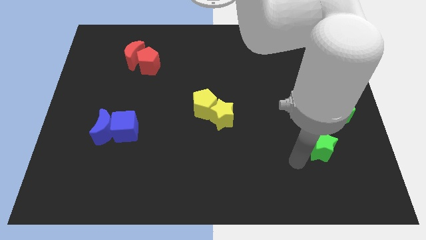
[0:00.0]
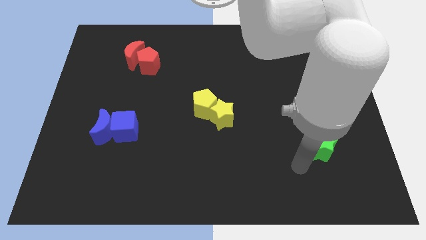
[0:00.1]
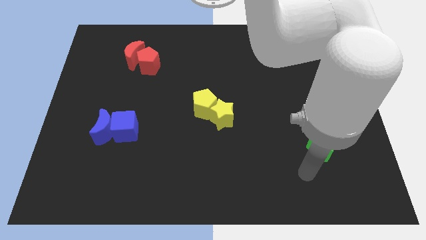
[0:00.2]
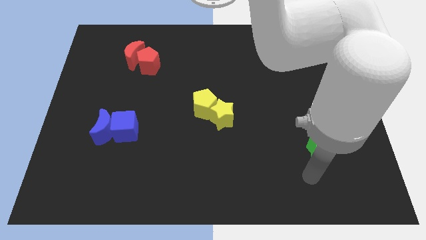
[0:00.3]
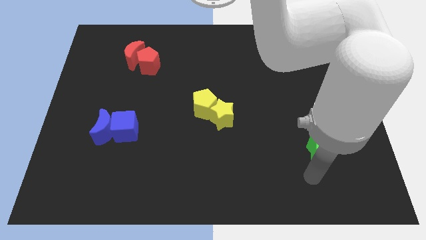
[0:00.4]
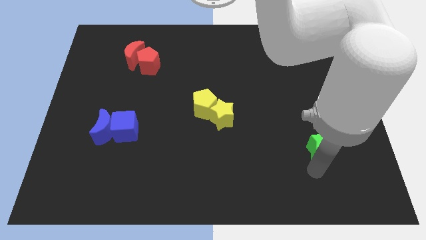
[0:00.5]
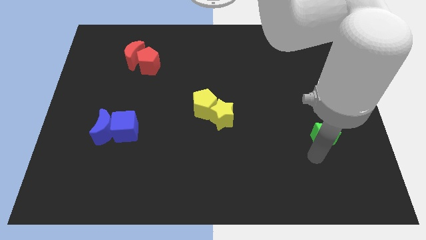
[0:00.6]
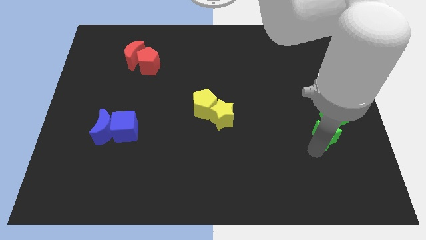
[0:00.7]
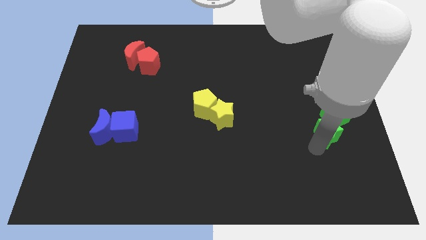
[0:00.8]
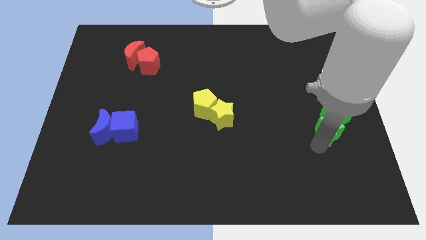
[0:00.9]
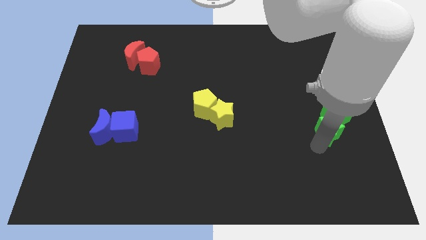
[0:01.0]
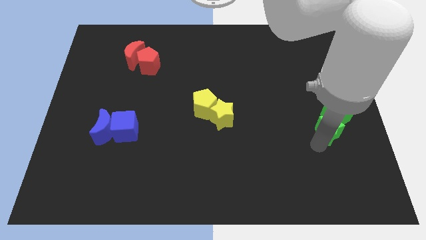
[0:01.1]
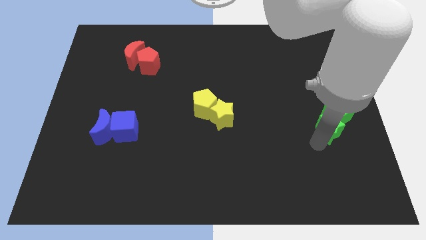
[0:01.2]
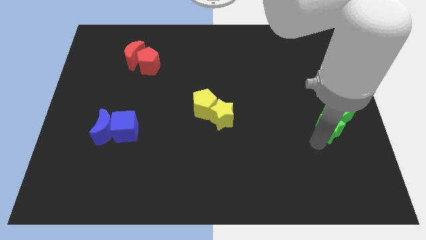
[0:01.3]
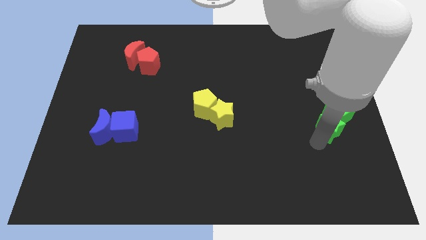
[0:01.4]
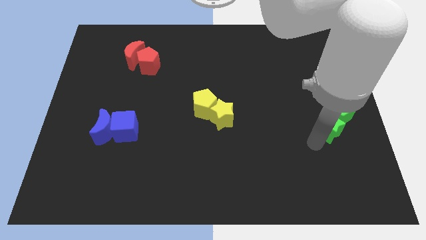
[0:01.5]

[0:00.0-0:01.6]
slide the green star into the bottom left of the green cube

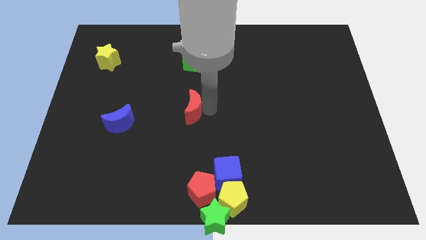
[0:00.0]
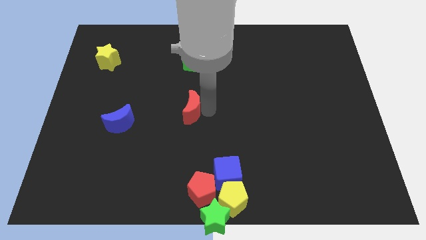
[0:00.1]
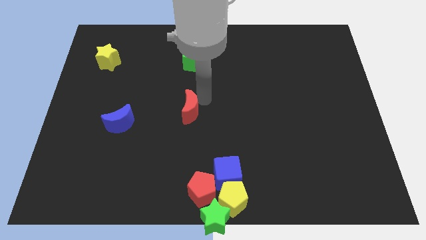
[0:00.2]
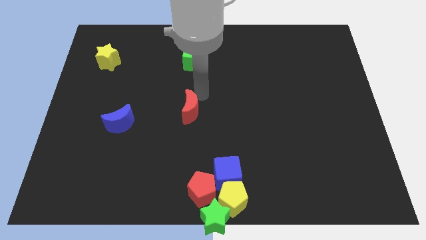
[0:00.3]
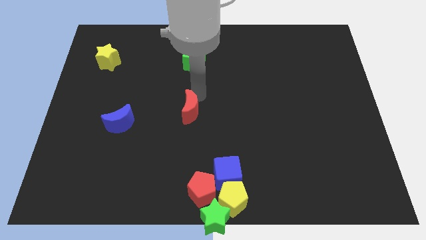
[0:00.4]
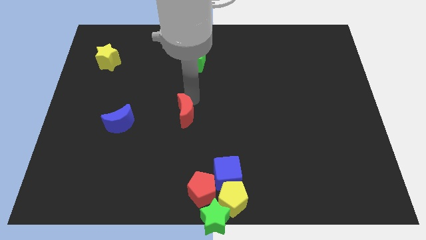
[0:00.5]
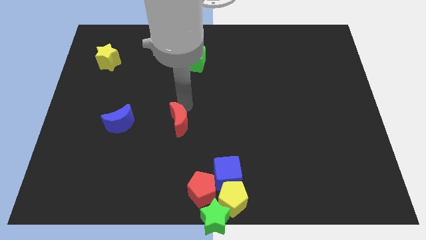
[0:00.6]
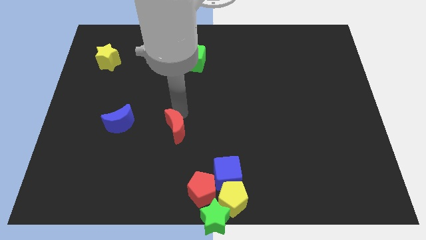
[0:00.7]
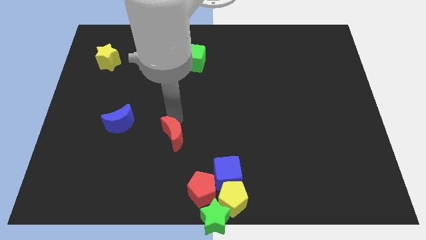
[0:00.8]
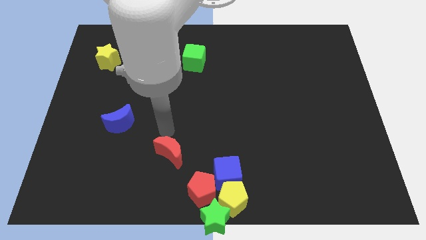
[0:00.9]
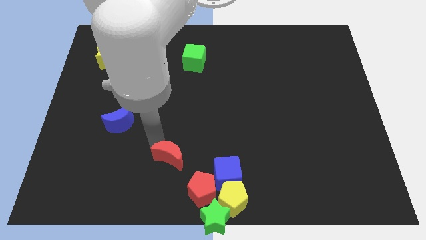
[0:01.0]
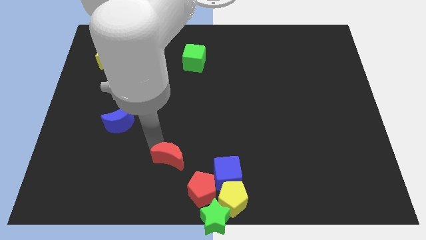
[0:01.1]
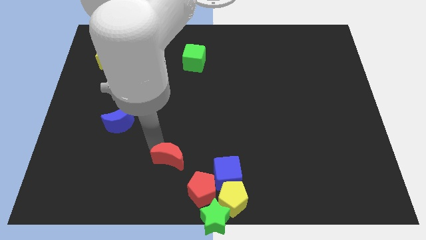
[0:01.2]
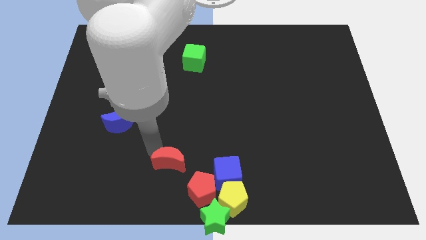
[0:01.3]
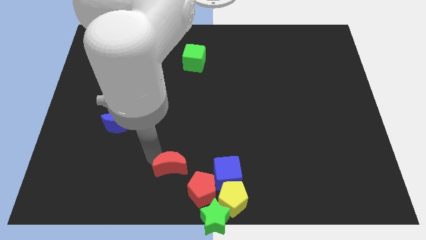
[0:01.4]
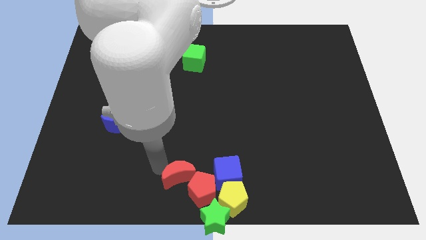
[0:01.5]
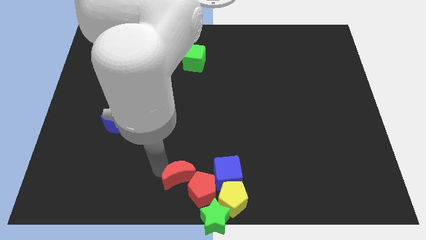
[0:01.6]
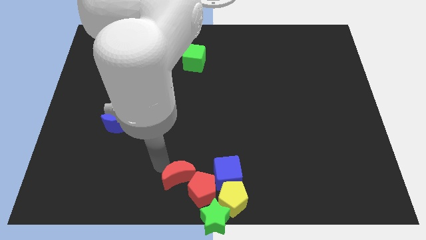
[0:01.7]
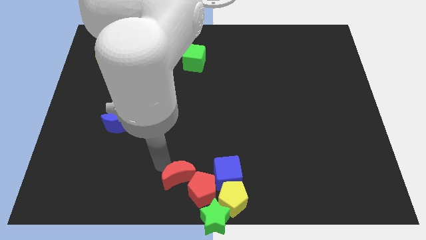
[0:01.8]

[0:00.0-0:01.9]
place the red moon close to the red pentagon

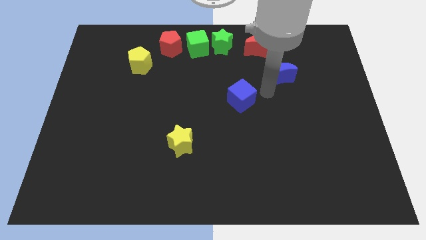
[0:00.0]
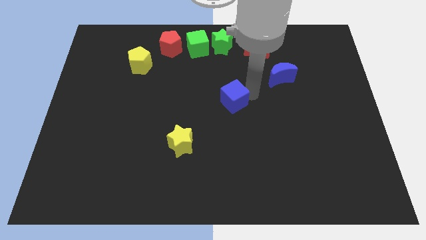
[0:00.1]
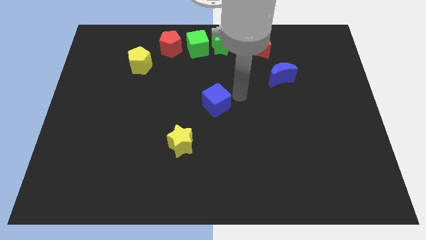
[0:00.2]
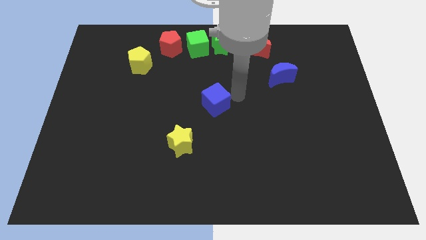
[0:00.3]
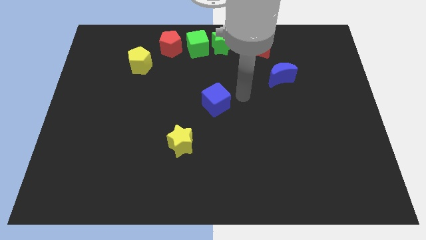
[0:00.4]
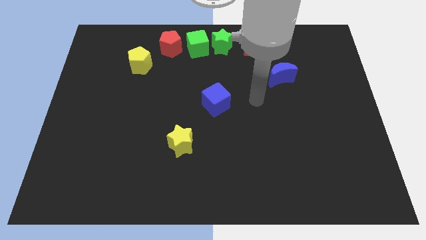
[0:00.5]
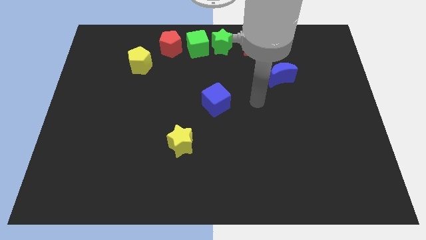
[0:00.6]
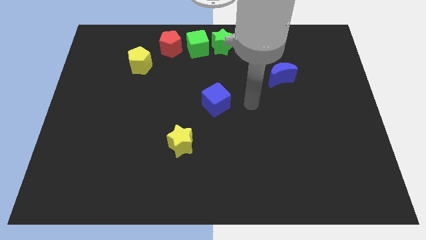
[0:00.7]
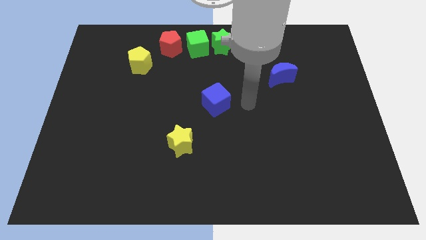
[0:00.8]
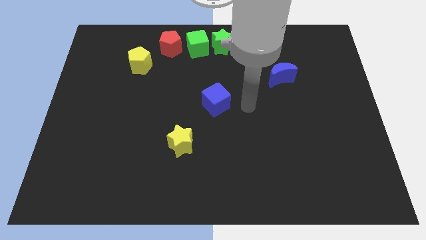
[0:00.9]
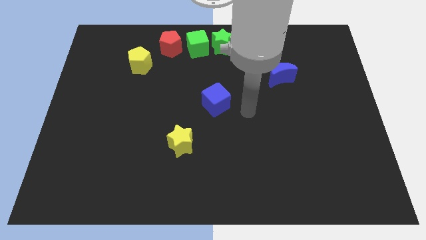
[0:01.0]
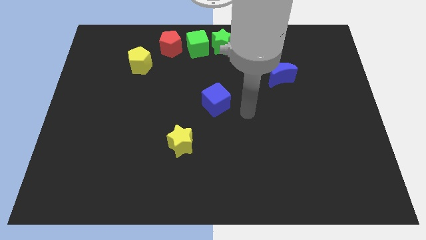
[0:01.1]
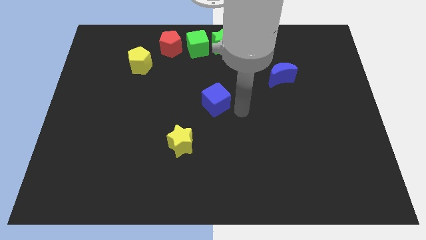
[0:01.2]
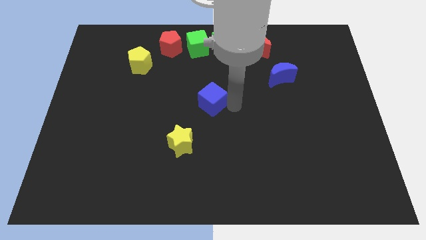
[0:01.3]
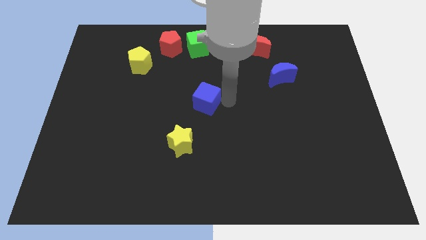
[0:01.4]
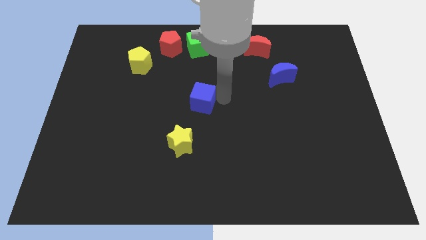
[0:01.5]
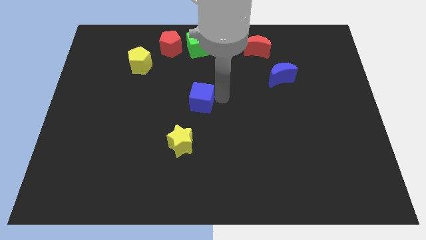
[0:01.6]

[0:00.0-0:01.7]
place the blue cube diagonally top right to yellow star

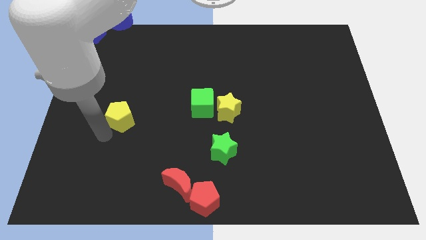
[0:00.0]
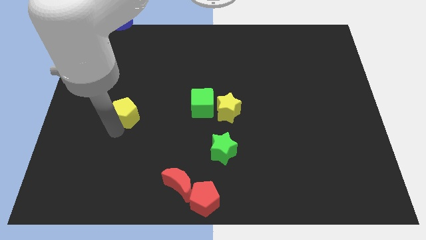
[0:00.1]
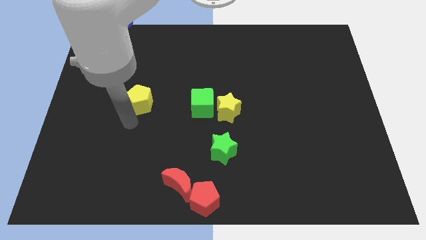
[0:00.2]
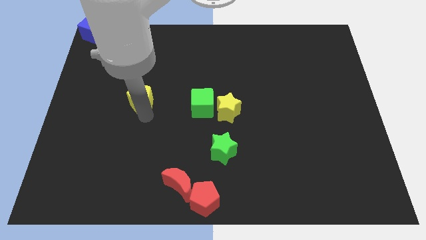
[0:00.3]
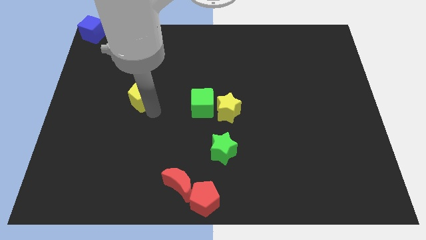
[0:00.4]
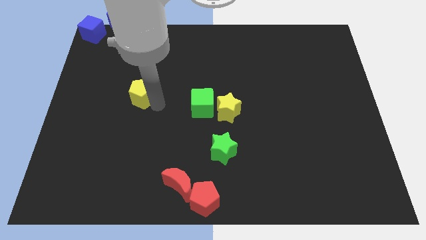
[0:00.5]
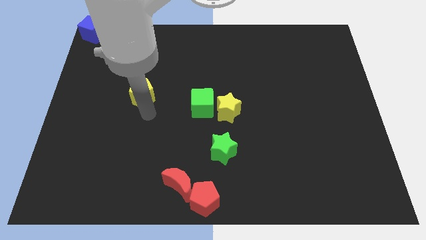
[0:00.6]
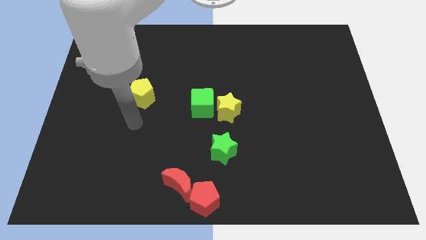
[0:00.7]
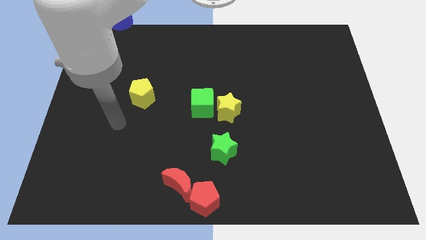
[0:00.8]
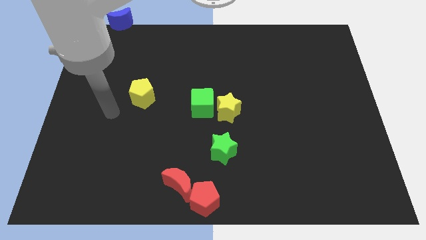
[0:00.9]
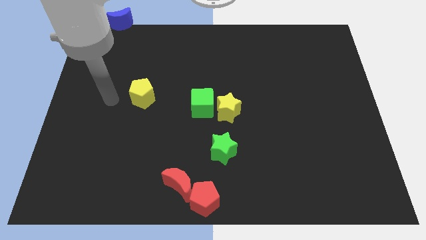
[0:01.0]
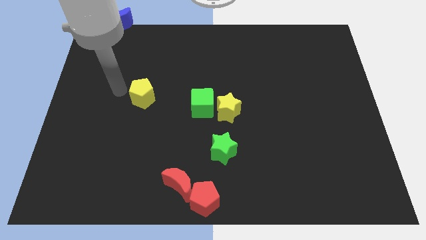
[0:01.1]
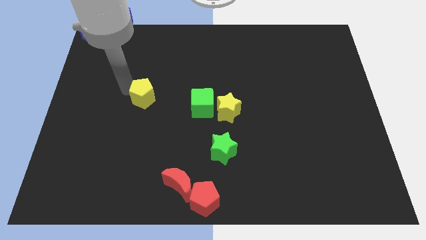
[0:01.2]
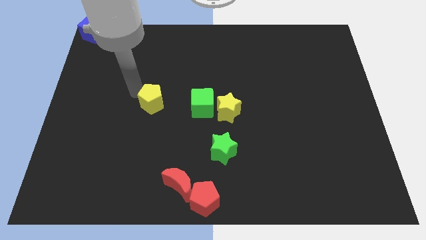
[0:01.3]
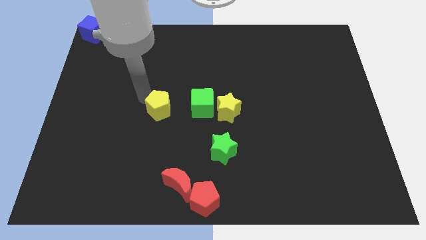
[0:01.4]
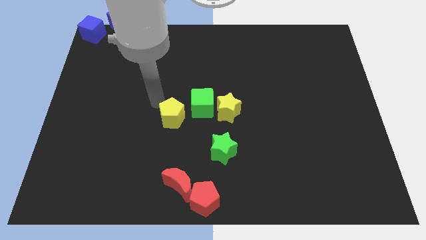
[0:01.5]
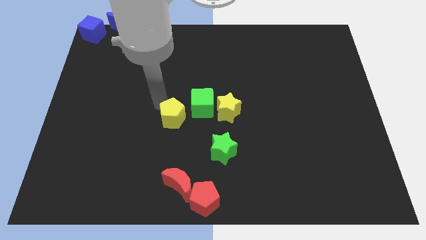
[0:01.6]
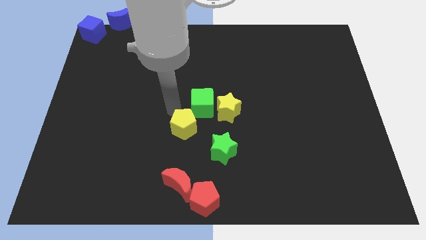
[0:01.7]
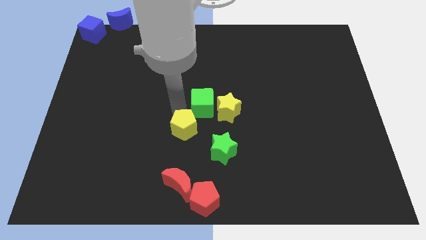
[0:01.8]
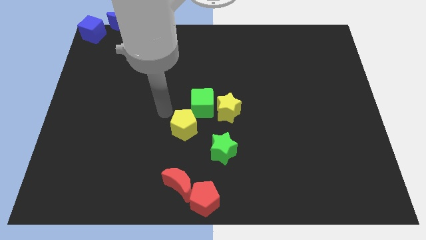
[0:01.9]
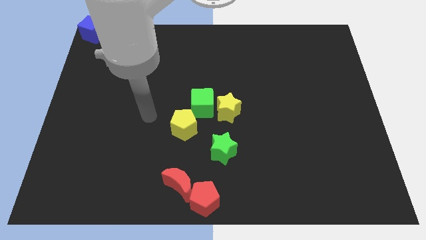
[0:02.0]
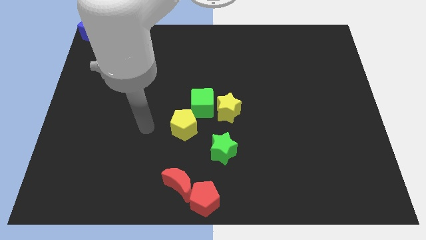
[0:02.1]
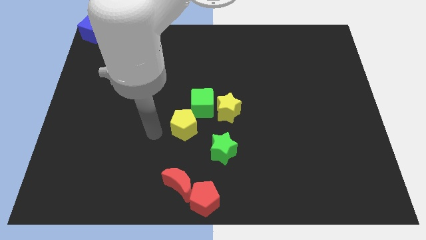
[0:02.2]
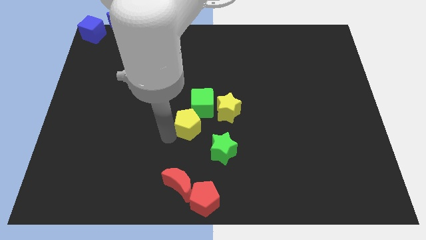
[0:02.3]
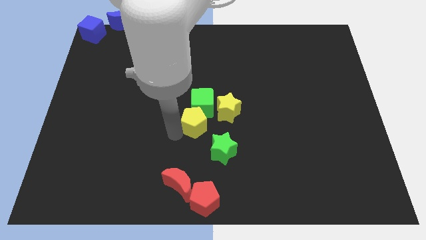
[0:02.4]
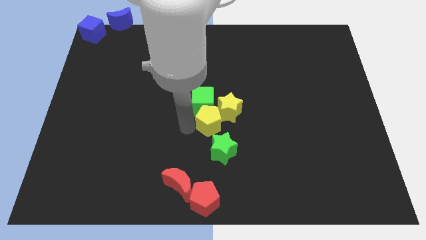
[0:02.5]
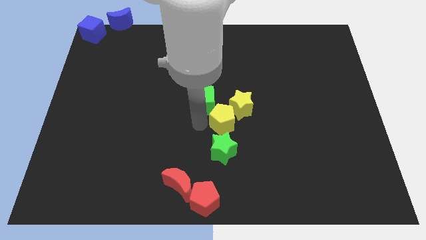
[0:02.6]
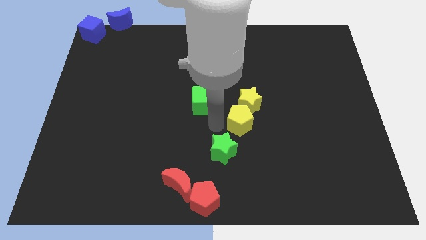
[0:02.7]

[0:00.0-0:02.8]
move the yellow pentagon below the yellow star

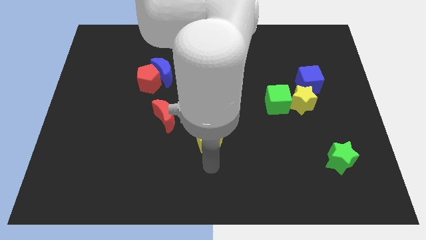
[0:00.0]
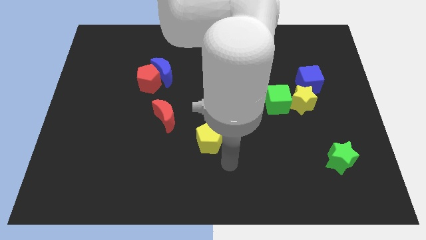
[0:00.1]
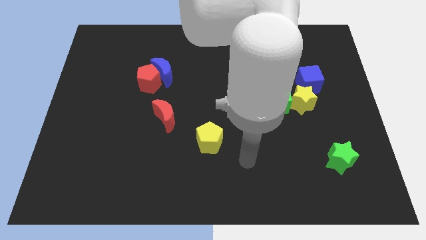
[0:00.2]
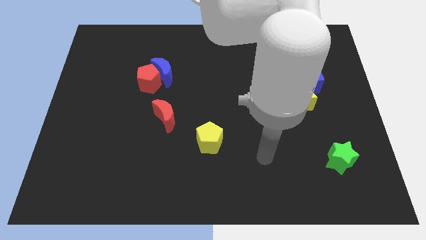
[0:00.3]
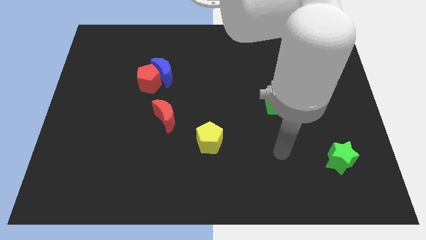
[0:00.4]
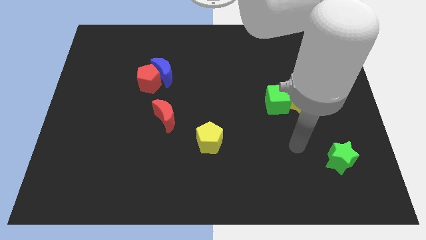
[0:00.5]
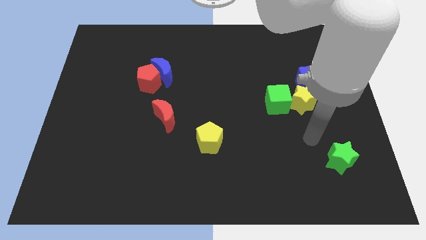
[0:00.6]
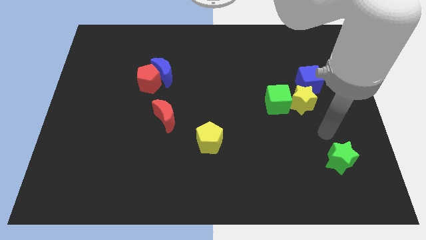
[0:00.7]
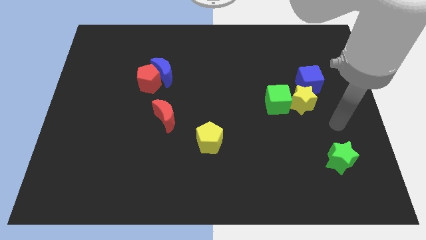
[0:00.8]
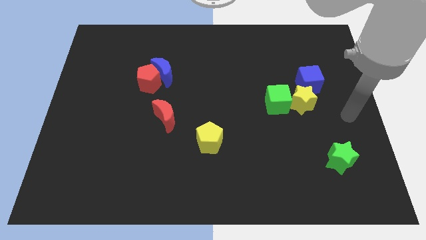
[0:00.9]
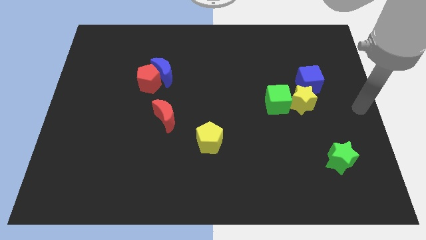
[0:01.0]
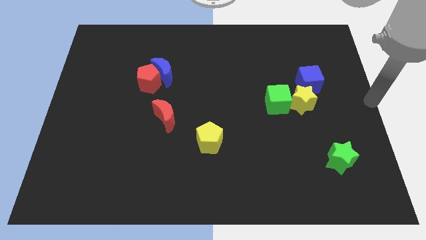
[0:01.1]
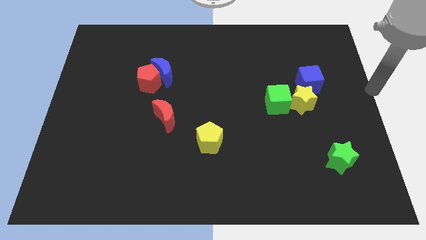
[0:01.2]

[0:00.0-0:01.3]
move your arm to the center right of the board
